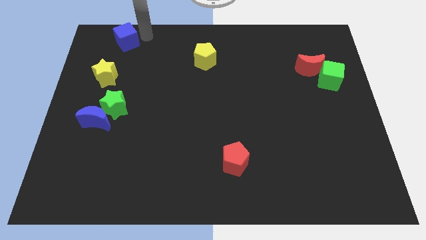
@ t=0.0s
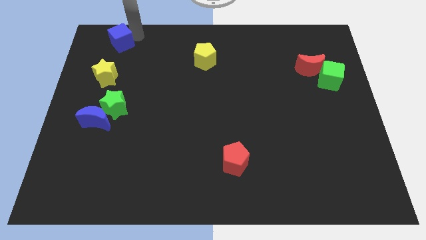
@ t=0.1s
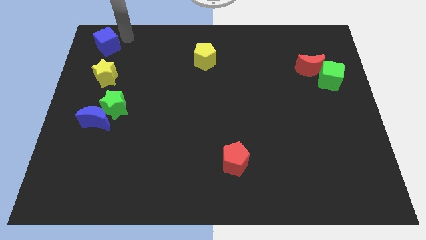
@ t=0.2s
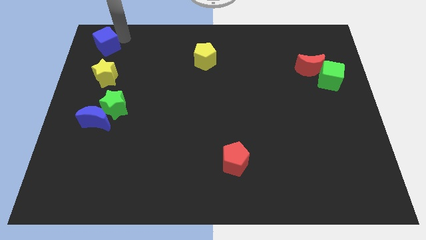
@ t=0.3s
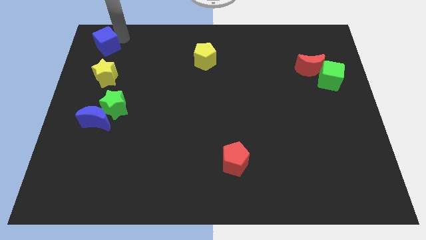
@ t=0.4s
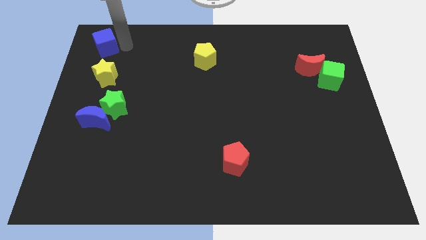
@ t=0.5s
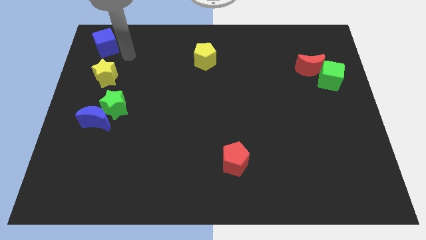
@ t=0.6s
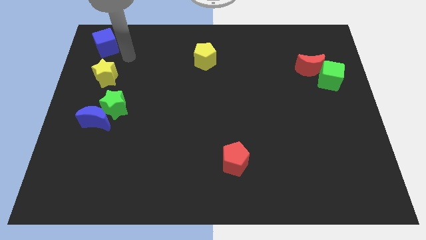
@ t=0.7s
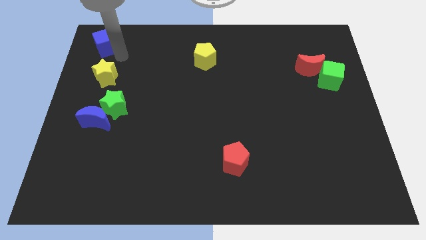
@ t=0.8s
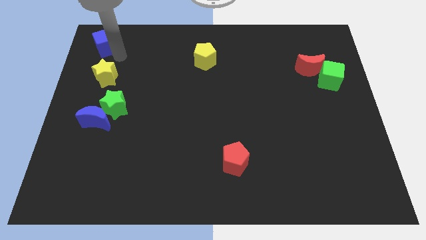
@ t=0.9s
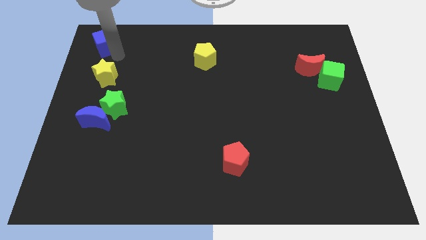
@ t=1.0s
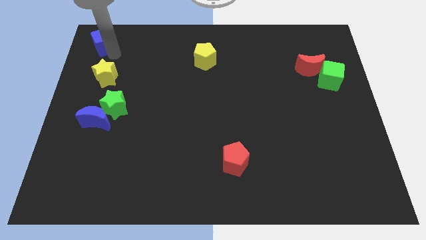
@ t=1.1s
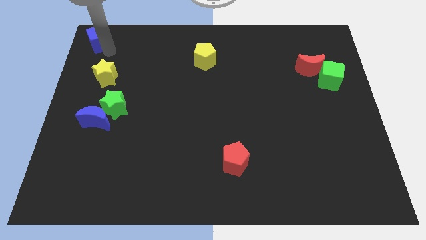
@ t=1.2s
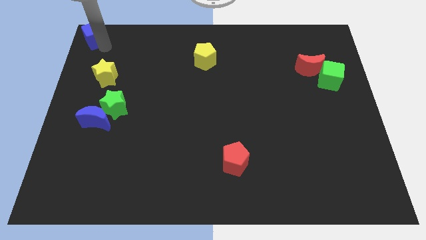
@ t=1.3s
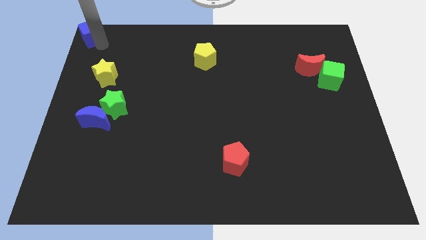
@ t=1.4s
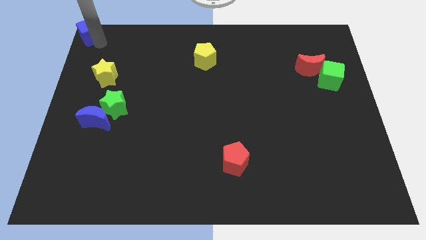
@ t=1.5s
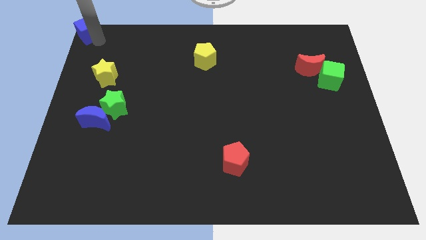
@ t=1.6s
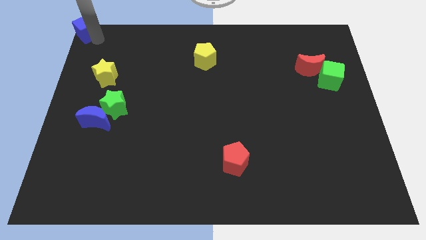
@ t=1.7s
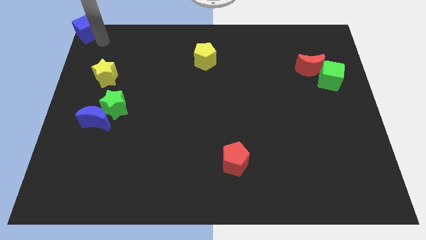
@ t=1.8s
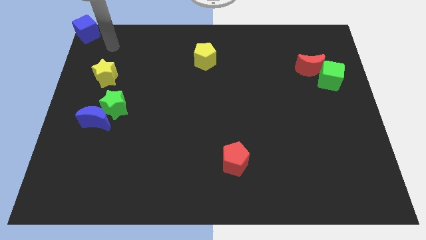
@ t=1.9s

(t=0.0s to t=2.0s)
place the blue cube at the top left corner

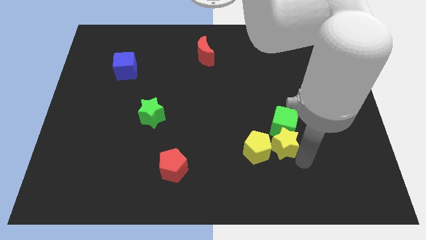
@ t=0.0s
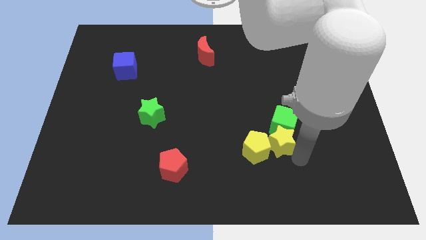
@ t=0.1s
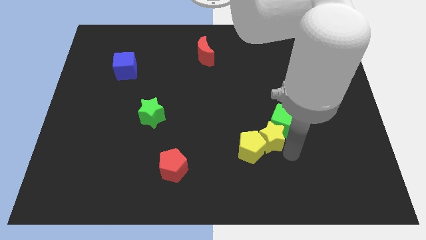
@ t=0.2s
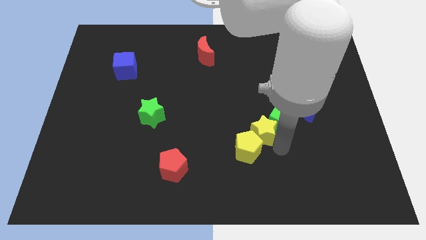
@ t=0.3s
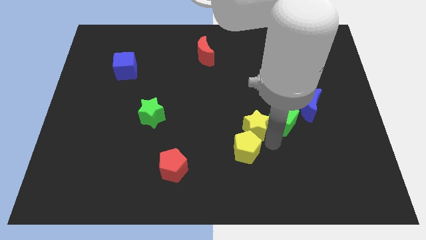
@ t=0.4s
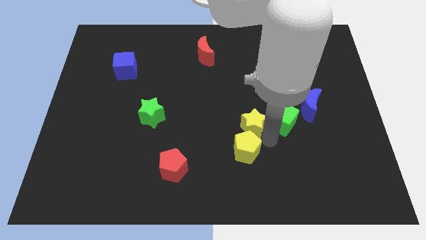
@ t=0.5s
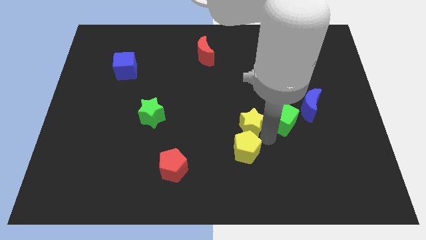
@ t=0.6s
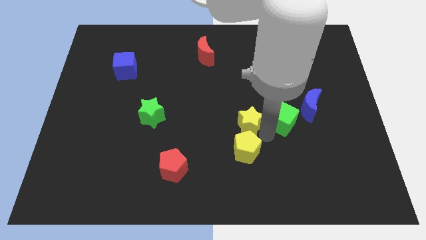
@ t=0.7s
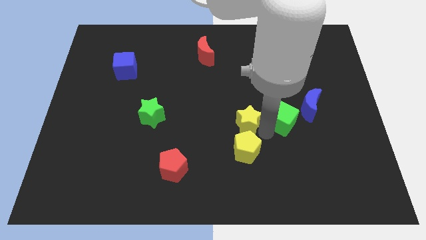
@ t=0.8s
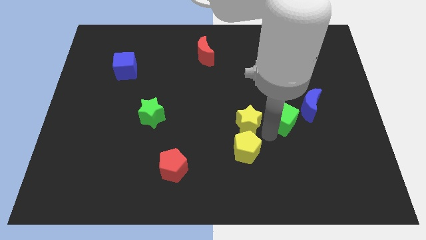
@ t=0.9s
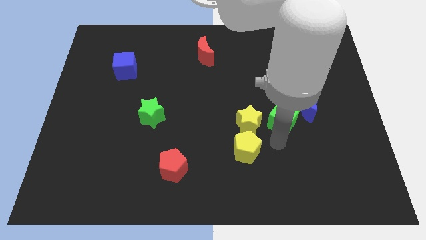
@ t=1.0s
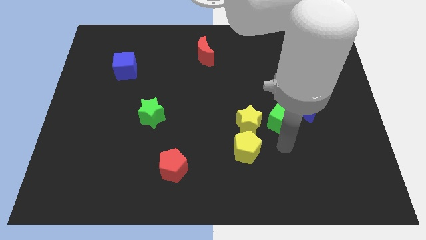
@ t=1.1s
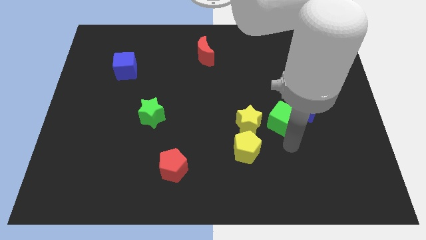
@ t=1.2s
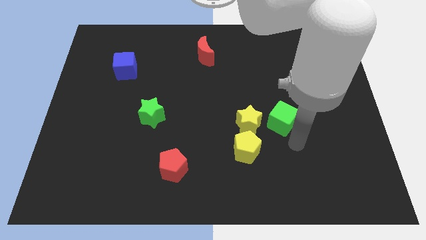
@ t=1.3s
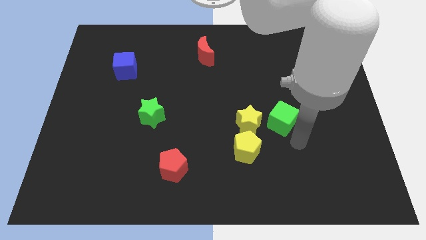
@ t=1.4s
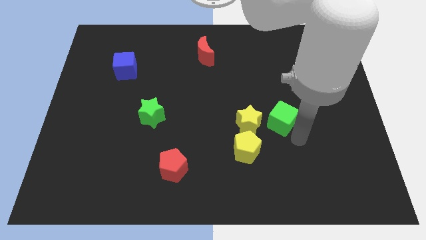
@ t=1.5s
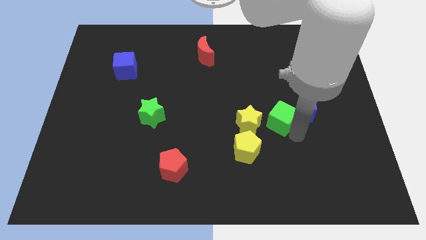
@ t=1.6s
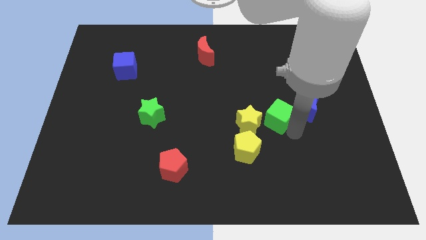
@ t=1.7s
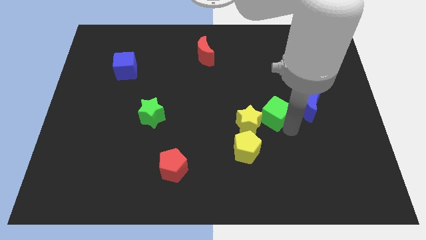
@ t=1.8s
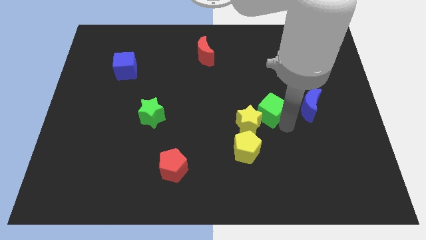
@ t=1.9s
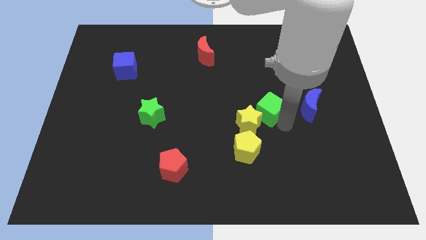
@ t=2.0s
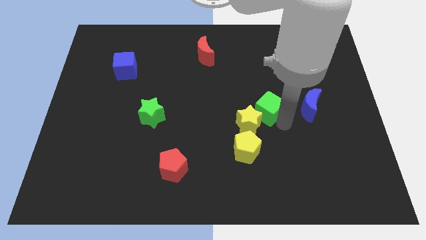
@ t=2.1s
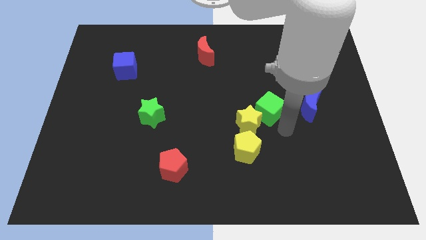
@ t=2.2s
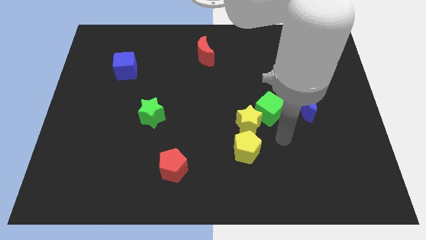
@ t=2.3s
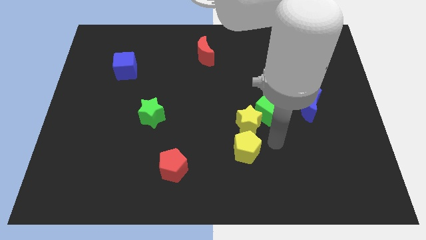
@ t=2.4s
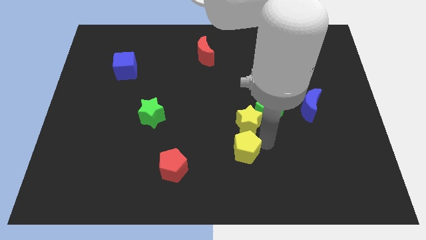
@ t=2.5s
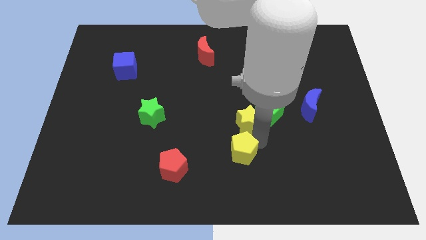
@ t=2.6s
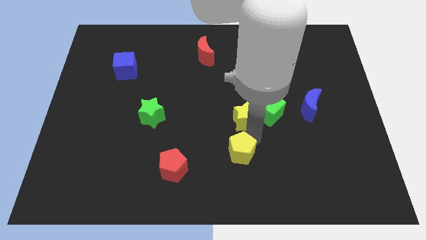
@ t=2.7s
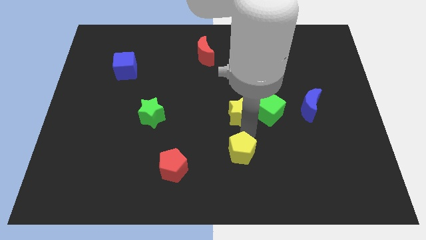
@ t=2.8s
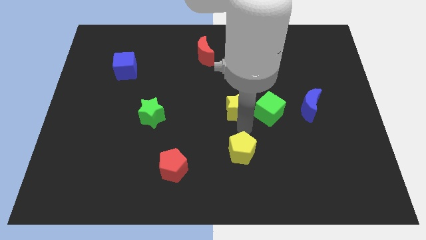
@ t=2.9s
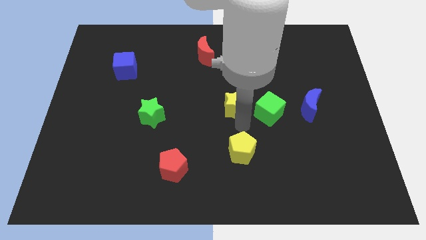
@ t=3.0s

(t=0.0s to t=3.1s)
separate the yellow star and green cube towards the center

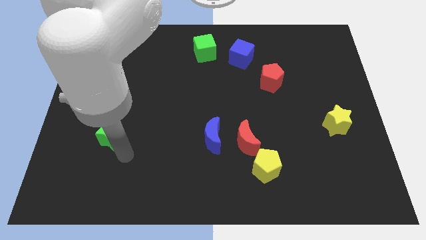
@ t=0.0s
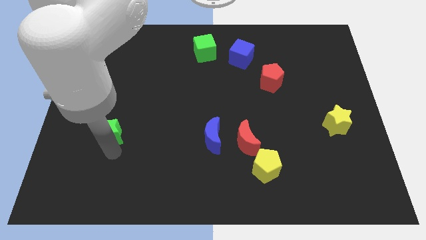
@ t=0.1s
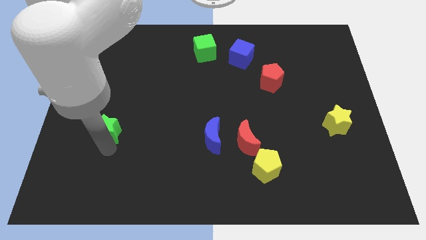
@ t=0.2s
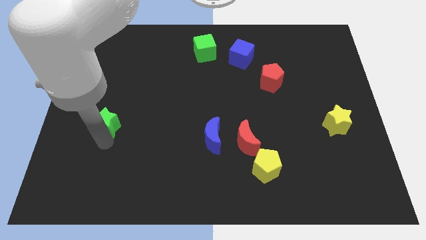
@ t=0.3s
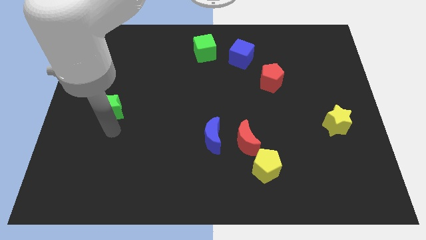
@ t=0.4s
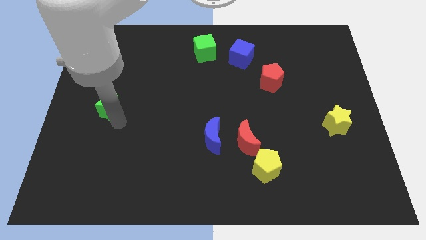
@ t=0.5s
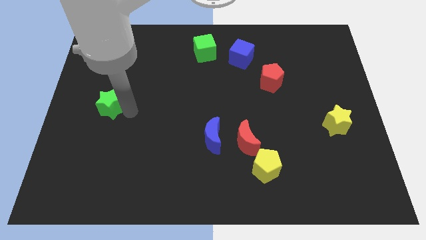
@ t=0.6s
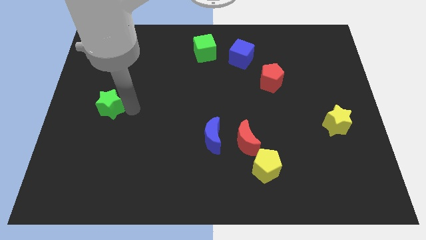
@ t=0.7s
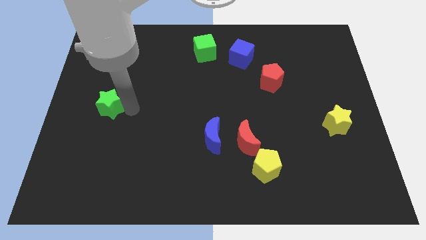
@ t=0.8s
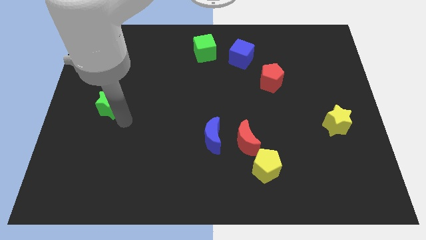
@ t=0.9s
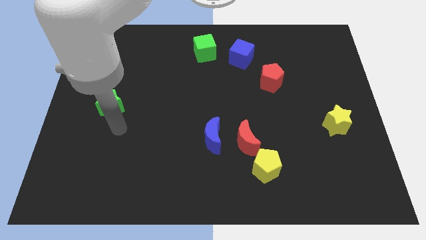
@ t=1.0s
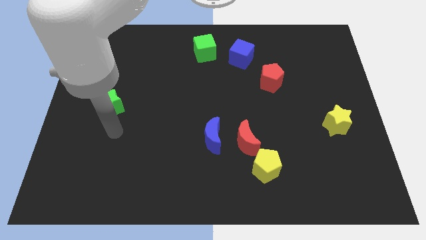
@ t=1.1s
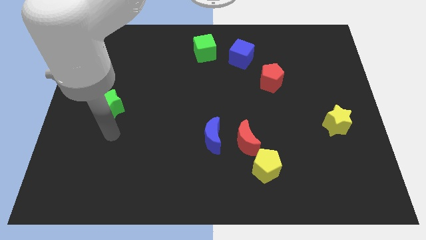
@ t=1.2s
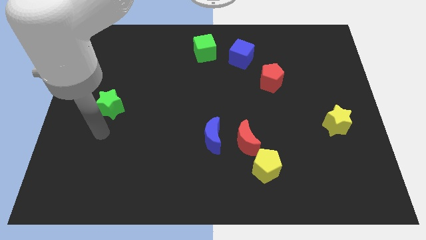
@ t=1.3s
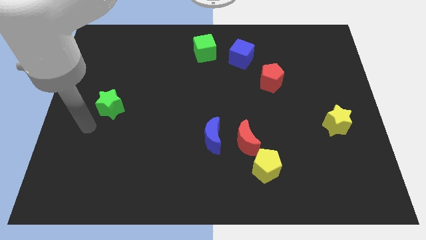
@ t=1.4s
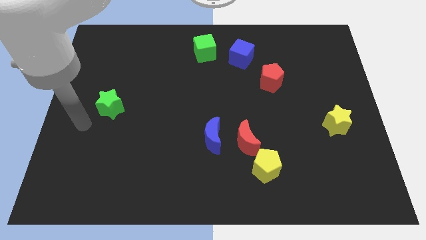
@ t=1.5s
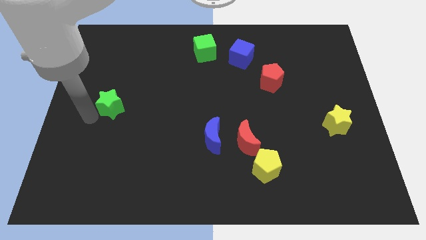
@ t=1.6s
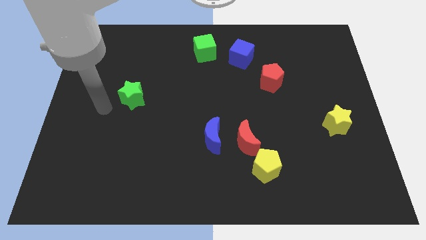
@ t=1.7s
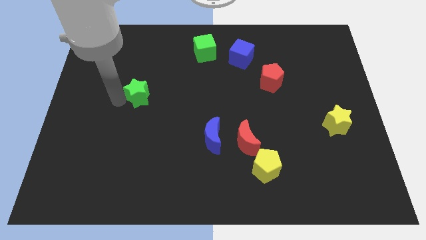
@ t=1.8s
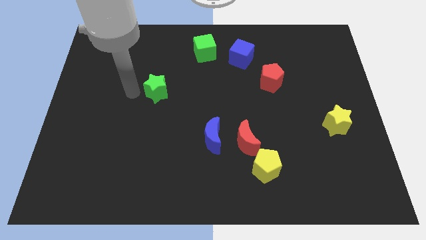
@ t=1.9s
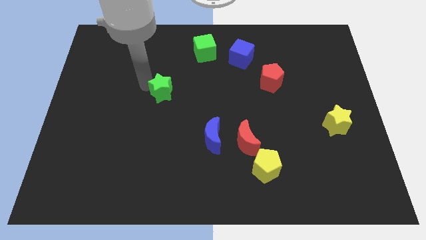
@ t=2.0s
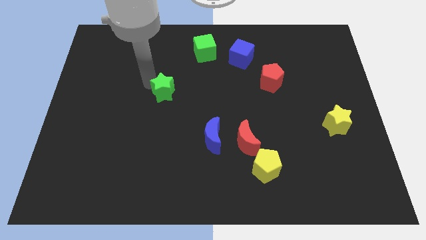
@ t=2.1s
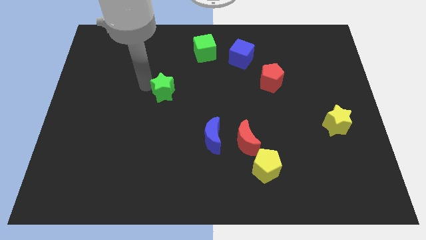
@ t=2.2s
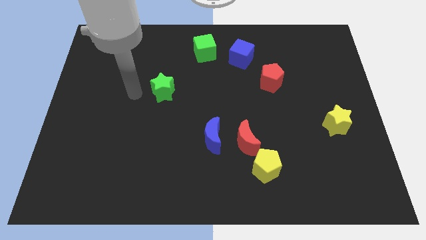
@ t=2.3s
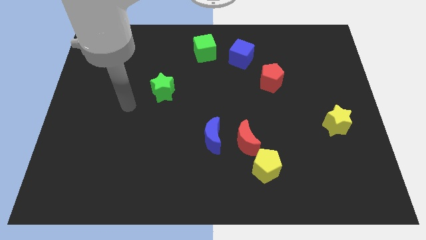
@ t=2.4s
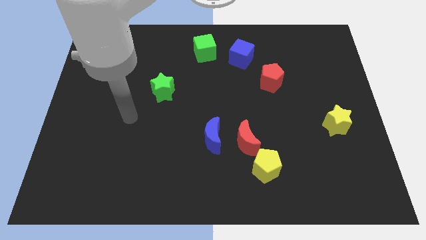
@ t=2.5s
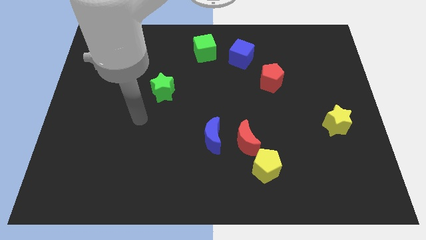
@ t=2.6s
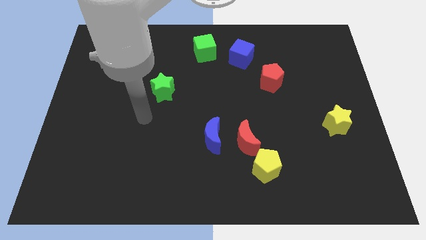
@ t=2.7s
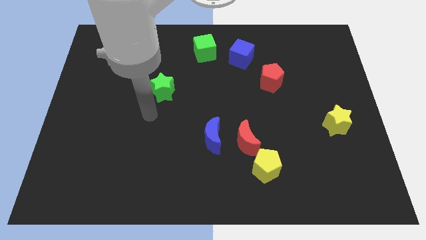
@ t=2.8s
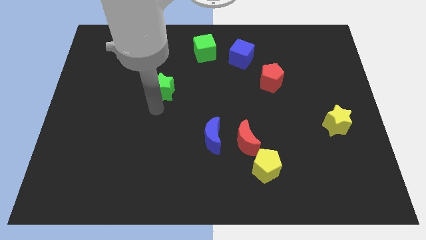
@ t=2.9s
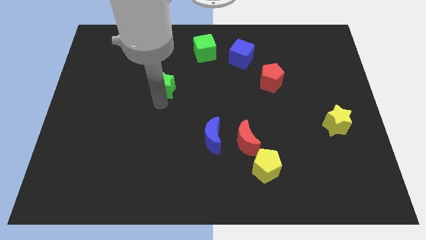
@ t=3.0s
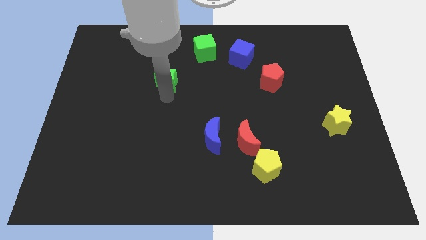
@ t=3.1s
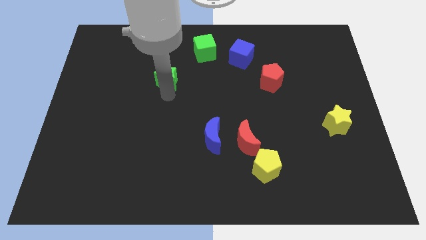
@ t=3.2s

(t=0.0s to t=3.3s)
place the green star horizontally left to the red pentagon

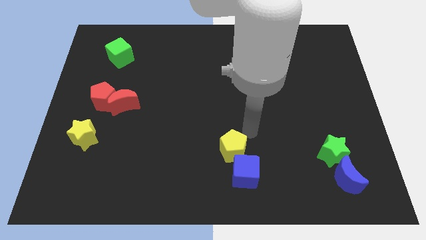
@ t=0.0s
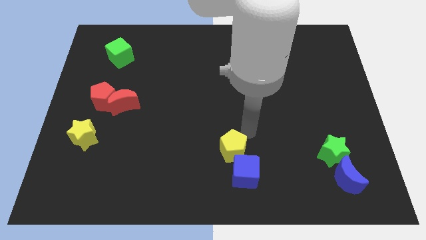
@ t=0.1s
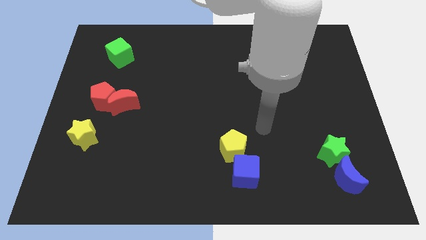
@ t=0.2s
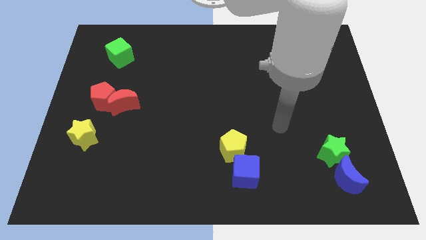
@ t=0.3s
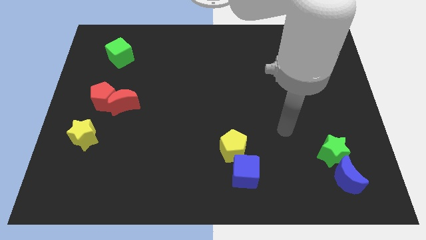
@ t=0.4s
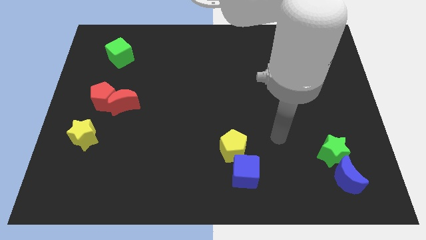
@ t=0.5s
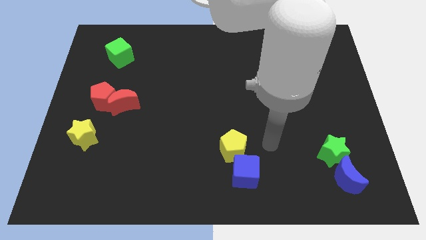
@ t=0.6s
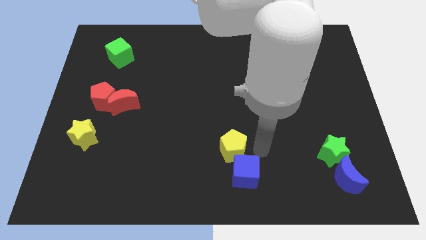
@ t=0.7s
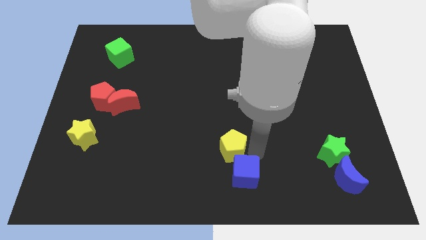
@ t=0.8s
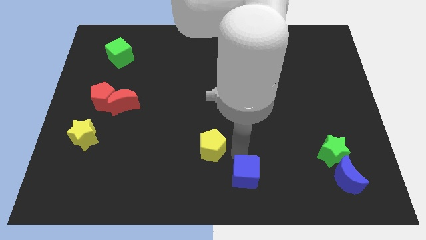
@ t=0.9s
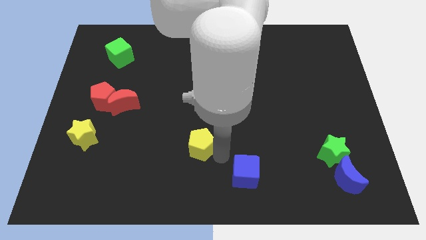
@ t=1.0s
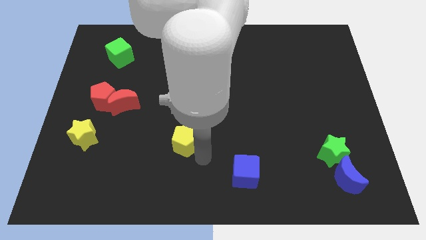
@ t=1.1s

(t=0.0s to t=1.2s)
move the yellow pentagon away from the blue cube
